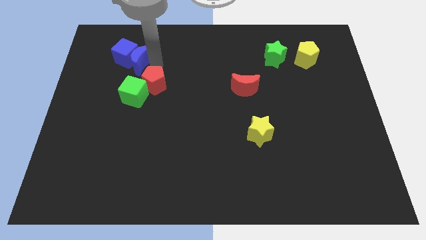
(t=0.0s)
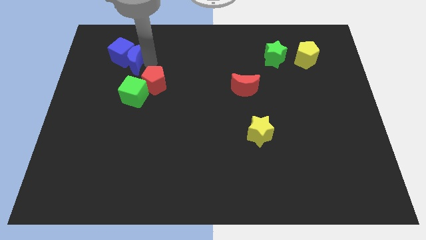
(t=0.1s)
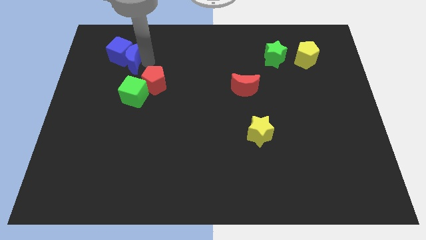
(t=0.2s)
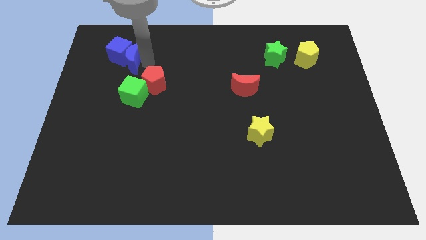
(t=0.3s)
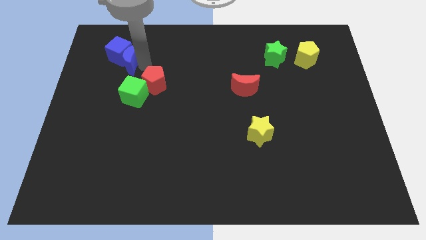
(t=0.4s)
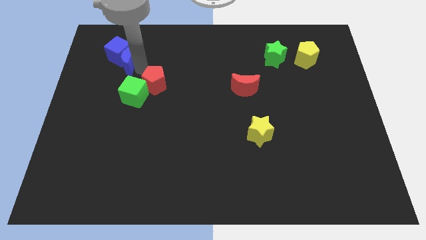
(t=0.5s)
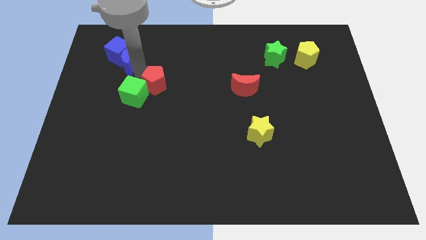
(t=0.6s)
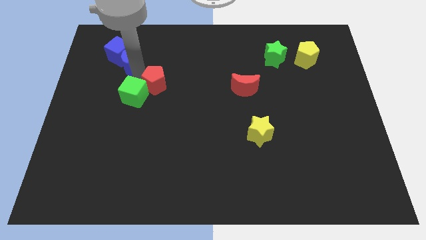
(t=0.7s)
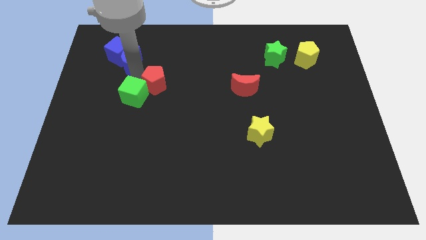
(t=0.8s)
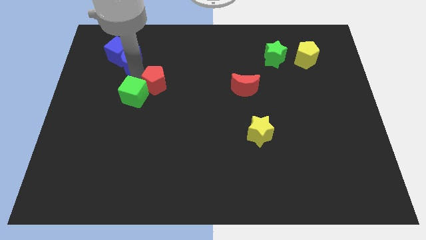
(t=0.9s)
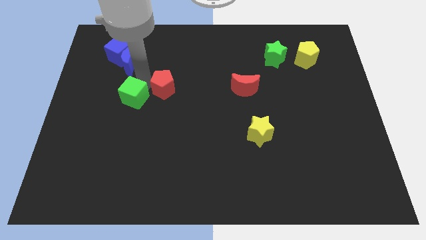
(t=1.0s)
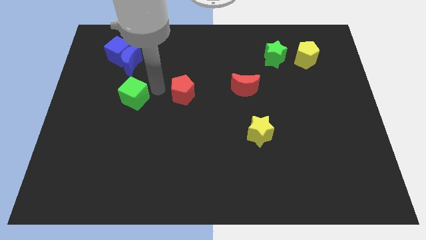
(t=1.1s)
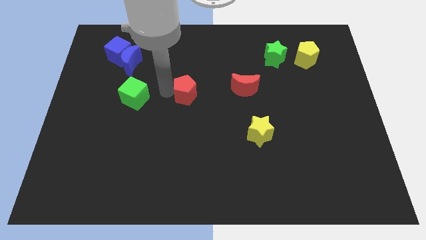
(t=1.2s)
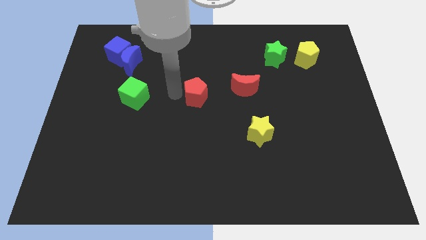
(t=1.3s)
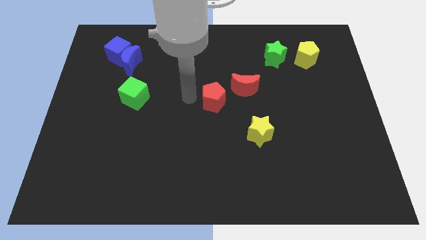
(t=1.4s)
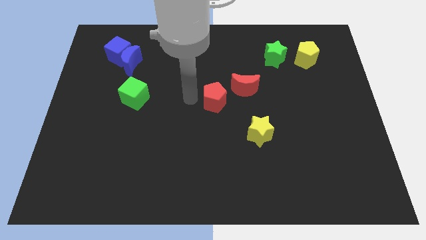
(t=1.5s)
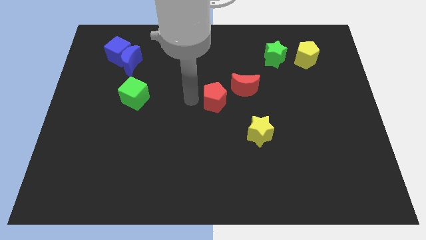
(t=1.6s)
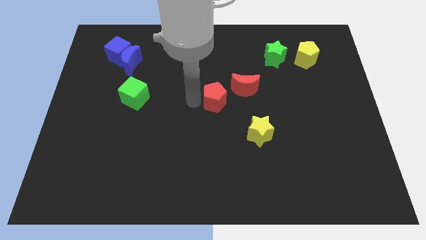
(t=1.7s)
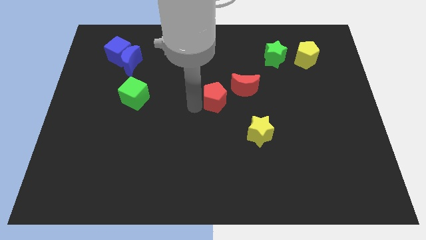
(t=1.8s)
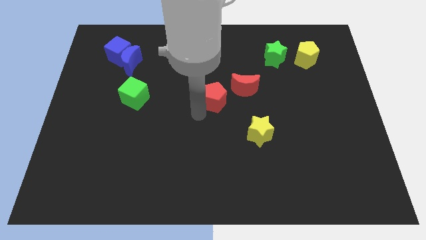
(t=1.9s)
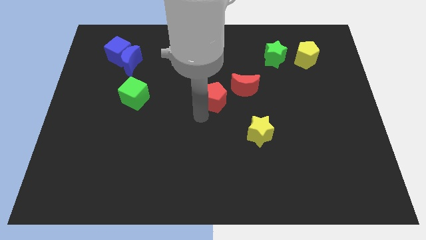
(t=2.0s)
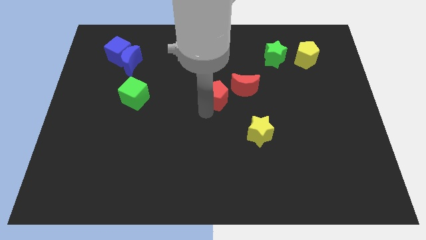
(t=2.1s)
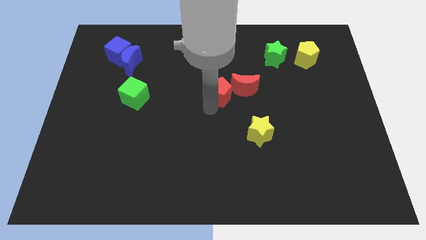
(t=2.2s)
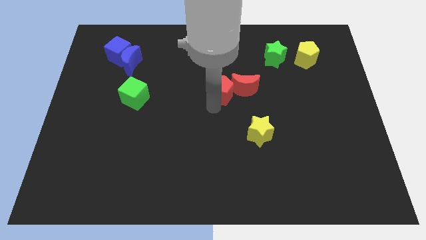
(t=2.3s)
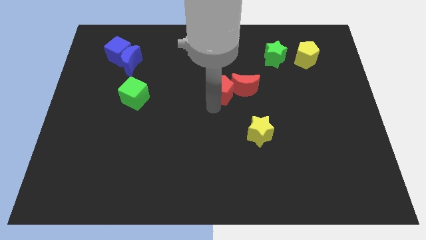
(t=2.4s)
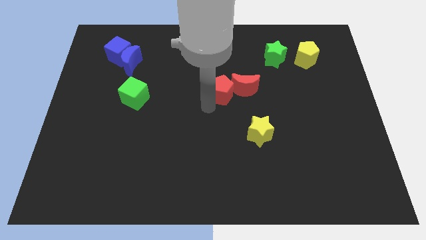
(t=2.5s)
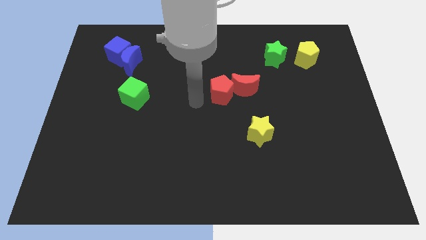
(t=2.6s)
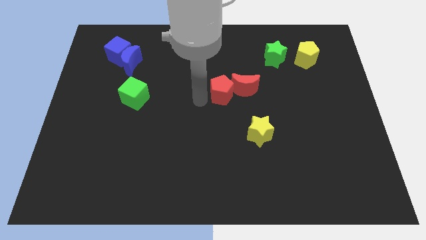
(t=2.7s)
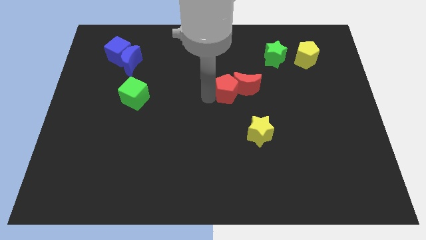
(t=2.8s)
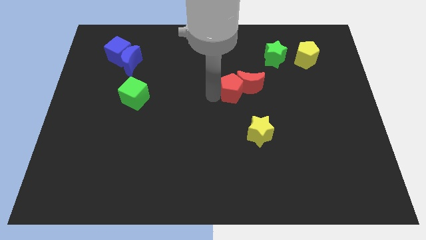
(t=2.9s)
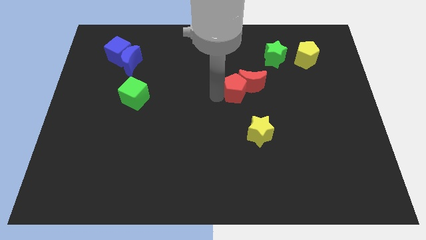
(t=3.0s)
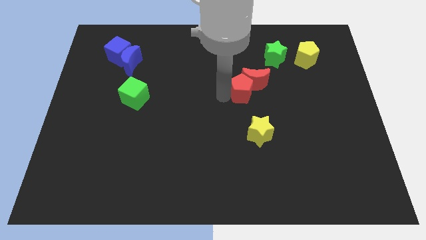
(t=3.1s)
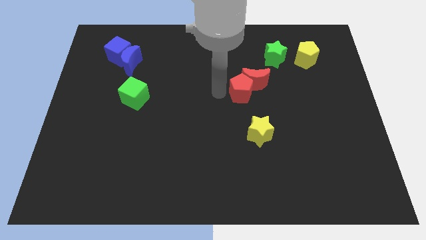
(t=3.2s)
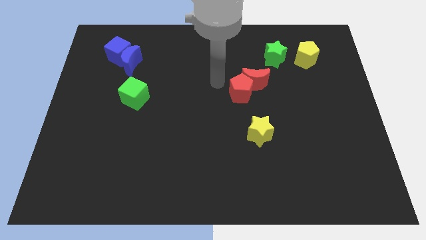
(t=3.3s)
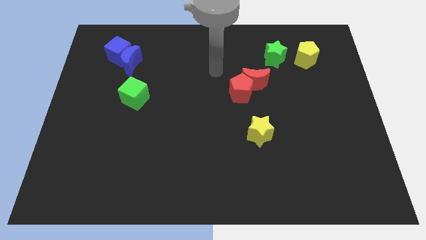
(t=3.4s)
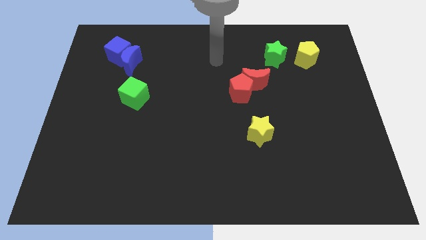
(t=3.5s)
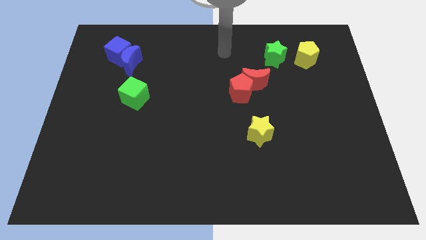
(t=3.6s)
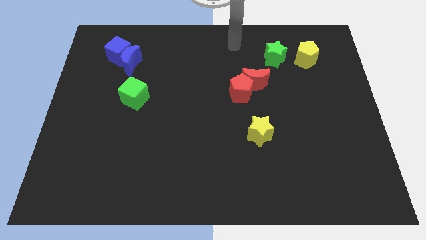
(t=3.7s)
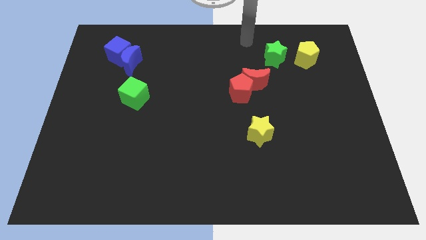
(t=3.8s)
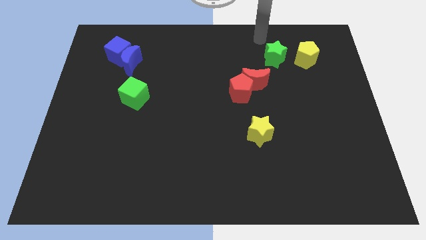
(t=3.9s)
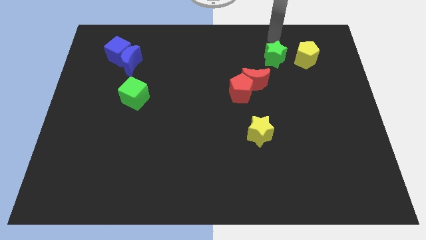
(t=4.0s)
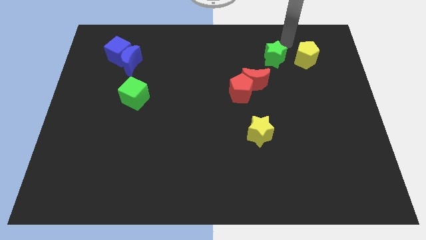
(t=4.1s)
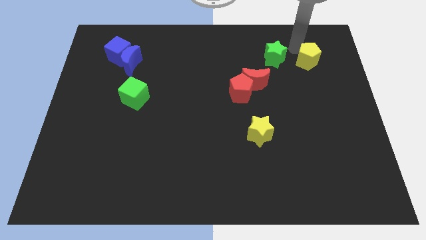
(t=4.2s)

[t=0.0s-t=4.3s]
push the red pentagon into the red moon

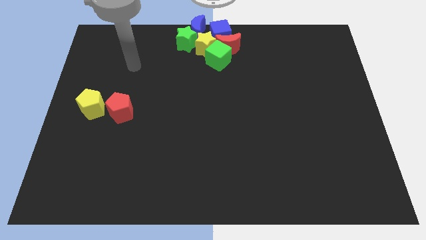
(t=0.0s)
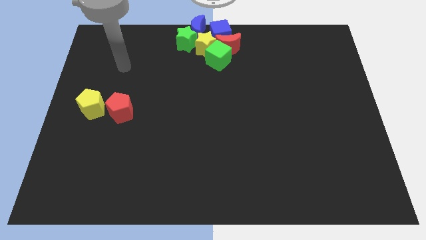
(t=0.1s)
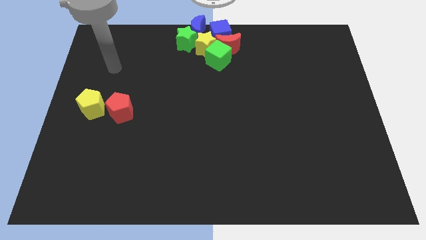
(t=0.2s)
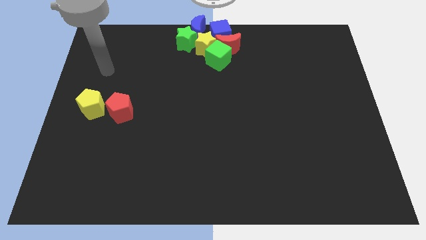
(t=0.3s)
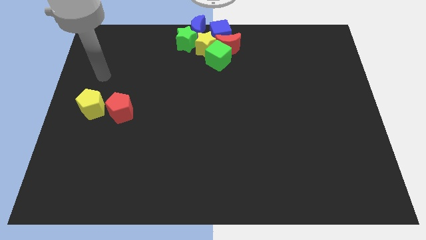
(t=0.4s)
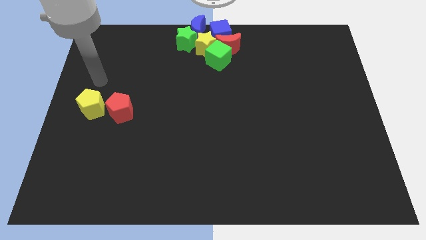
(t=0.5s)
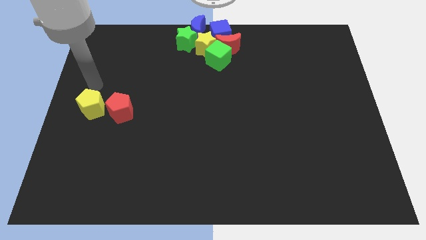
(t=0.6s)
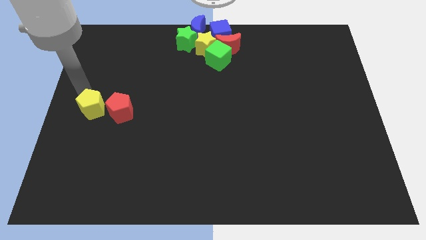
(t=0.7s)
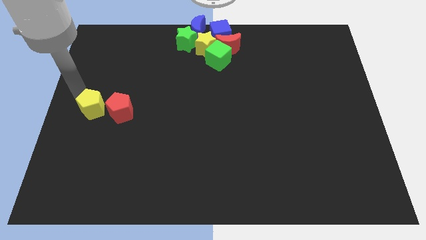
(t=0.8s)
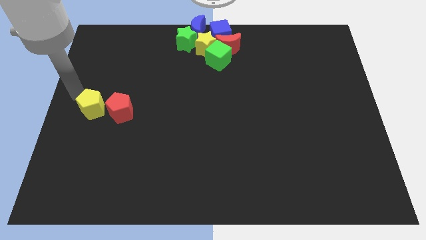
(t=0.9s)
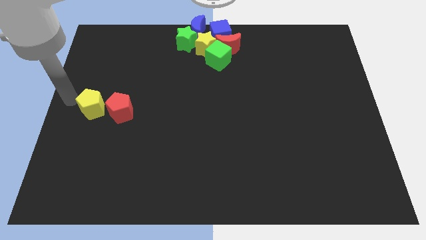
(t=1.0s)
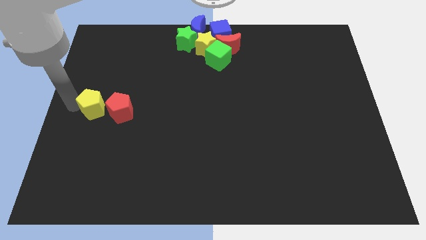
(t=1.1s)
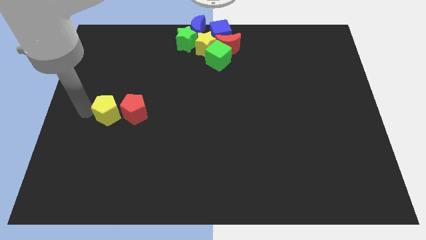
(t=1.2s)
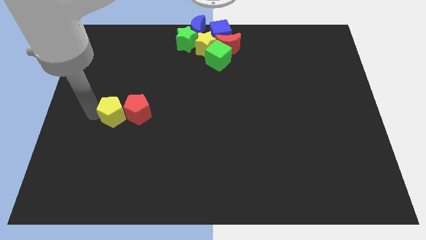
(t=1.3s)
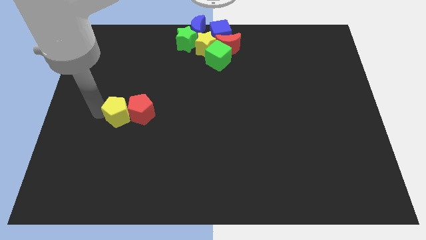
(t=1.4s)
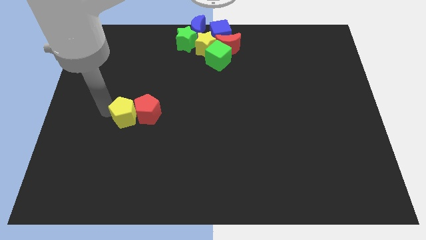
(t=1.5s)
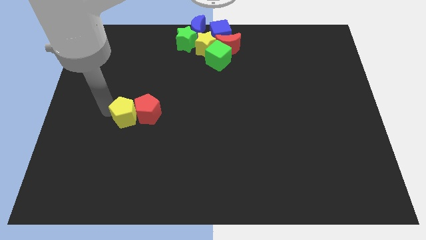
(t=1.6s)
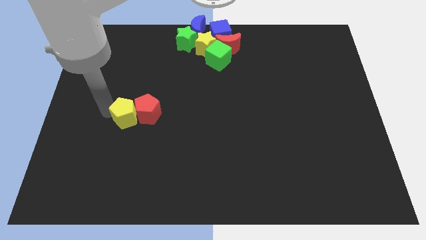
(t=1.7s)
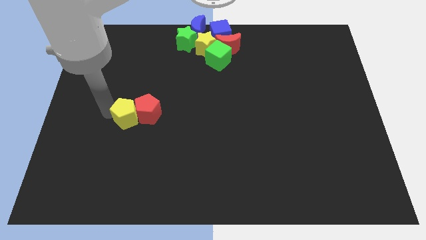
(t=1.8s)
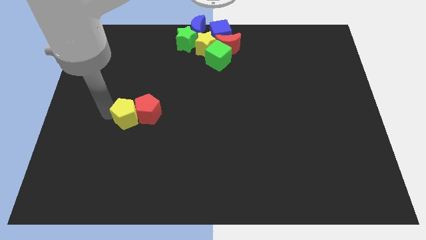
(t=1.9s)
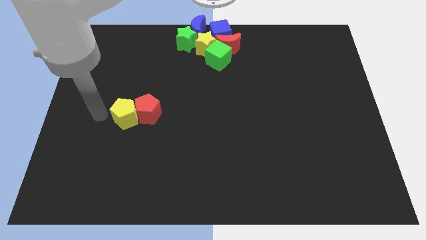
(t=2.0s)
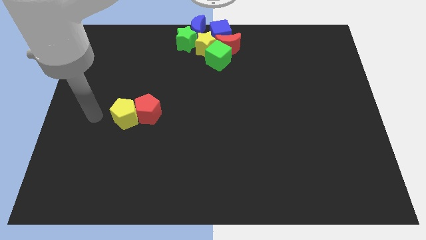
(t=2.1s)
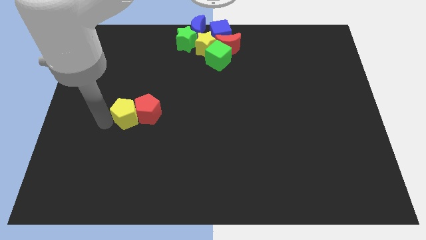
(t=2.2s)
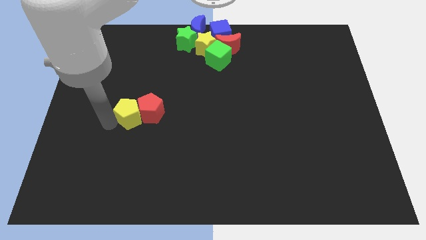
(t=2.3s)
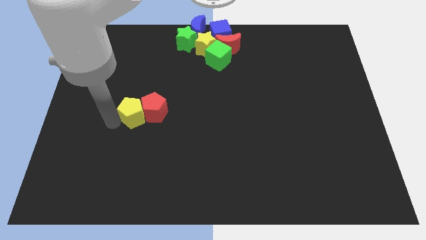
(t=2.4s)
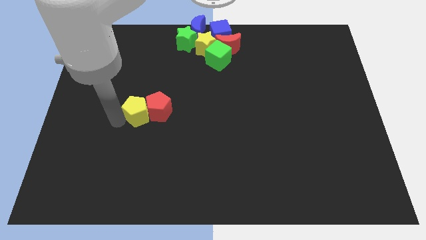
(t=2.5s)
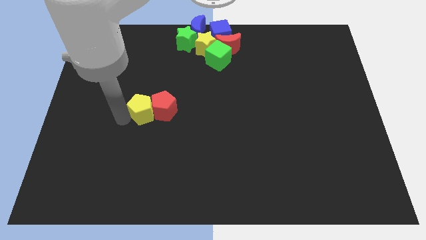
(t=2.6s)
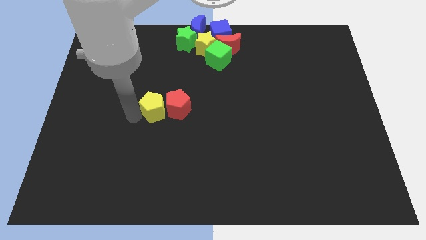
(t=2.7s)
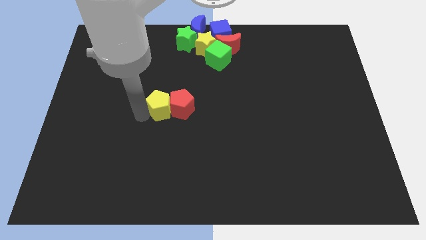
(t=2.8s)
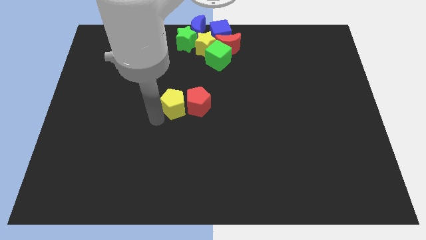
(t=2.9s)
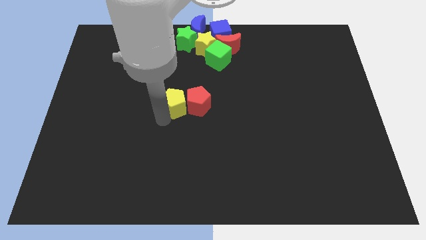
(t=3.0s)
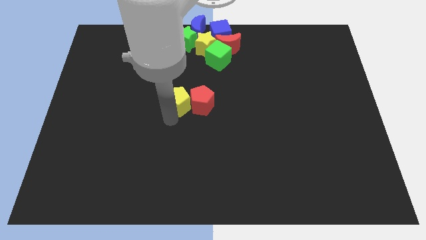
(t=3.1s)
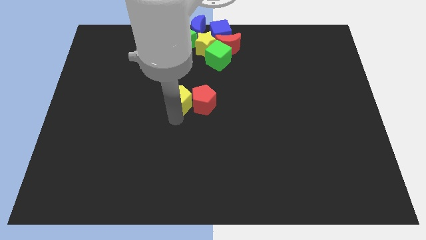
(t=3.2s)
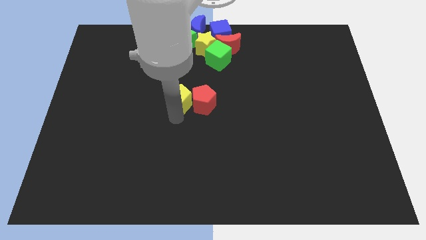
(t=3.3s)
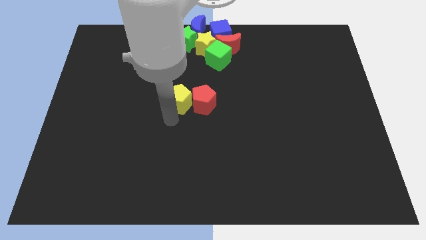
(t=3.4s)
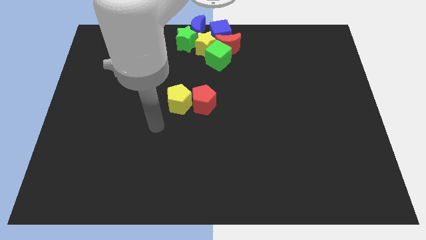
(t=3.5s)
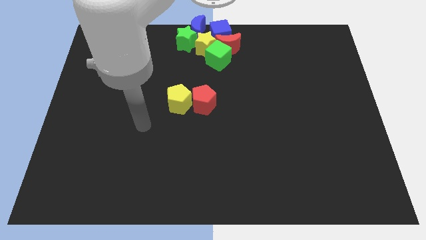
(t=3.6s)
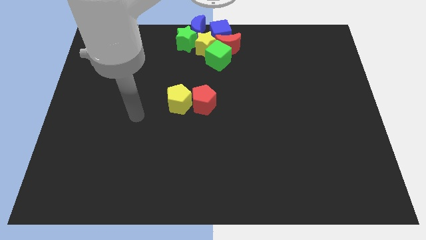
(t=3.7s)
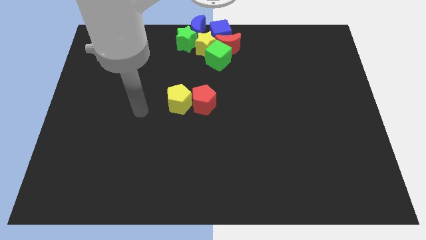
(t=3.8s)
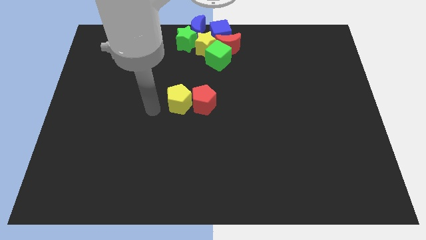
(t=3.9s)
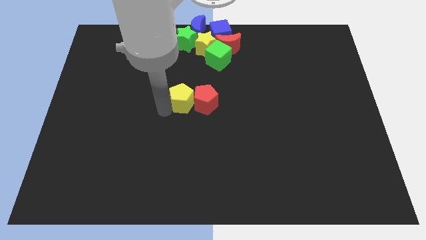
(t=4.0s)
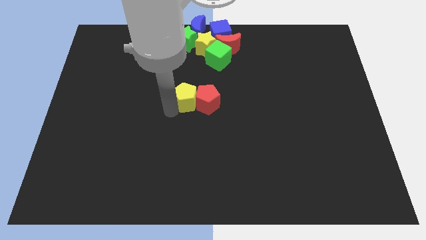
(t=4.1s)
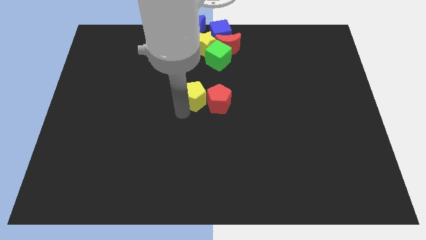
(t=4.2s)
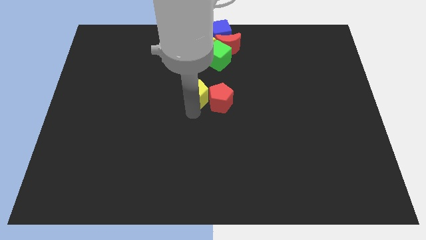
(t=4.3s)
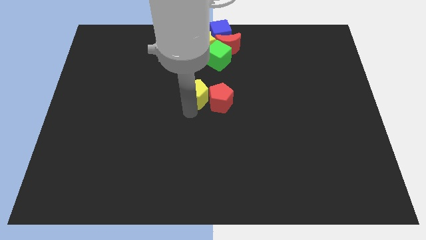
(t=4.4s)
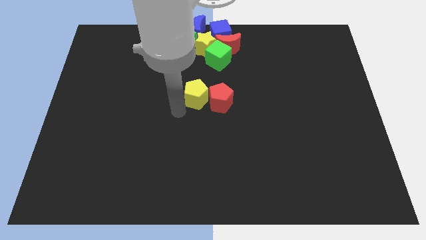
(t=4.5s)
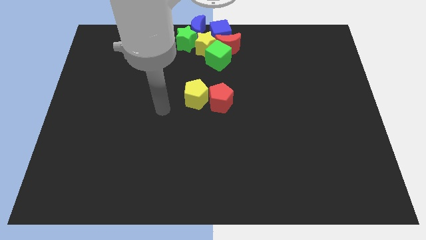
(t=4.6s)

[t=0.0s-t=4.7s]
move yellow pentagon along with red pentagon to the center of the board
